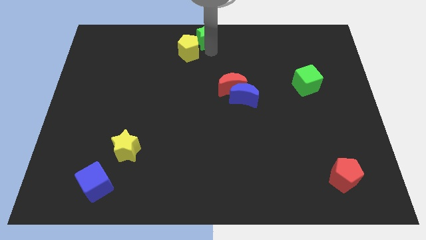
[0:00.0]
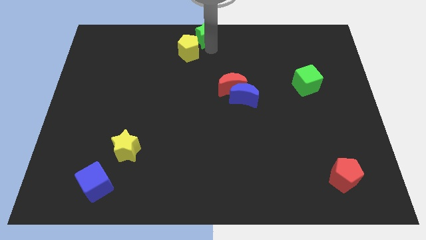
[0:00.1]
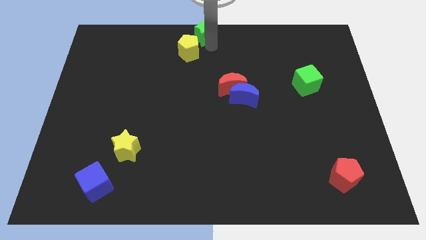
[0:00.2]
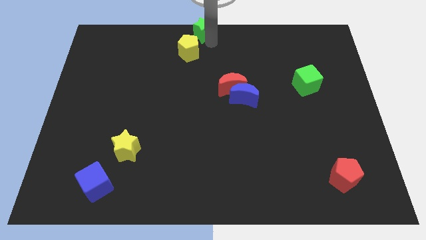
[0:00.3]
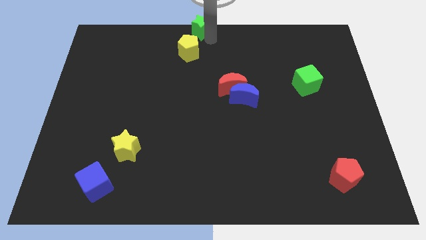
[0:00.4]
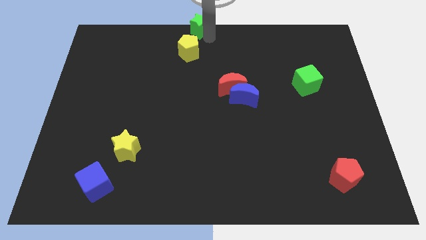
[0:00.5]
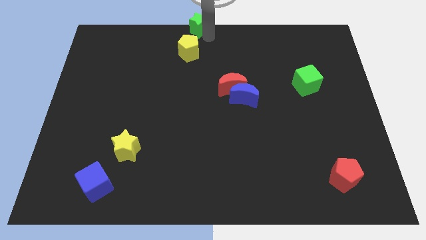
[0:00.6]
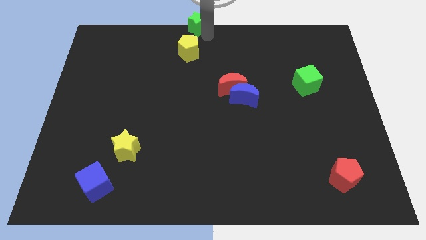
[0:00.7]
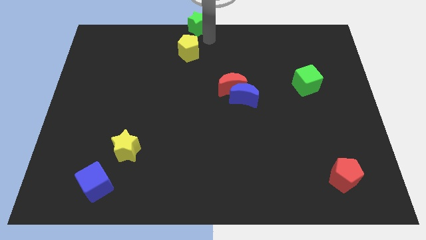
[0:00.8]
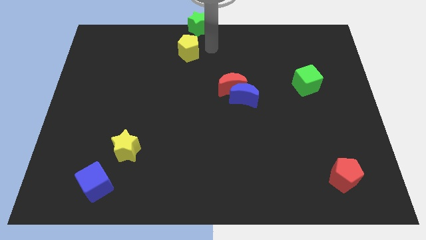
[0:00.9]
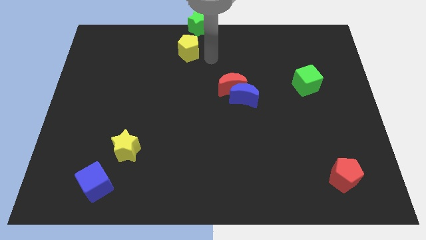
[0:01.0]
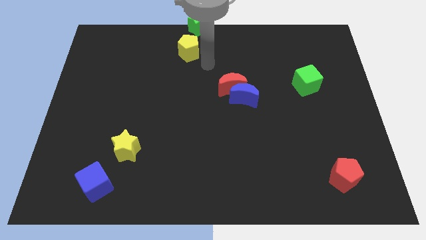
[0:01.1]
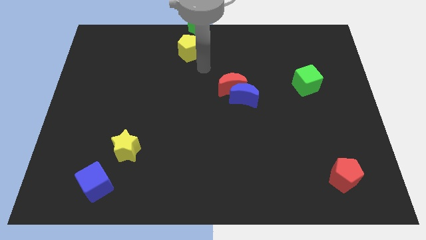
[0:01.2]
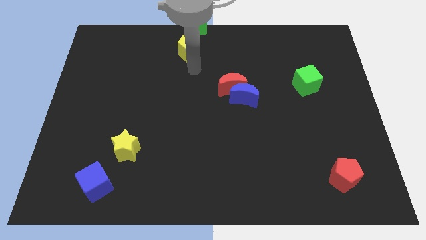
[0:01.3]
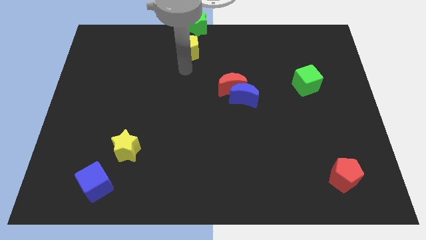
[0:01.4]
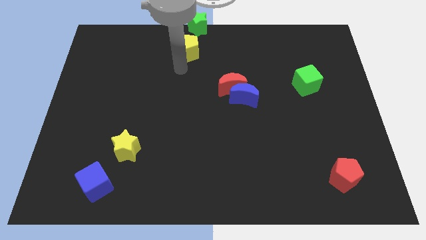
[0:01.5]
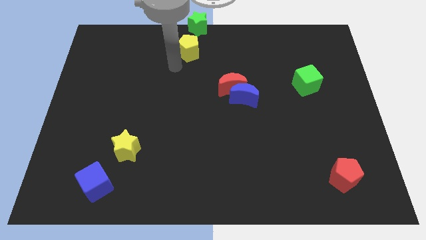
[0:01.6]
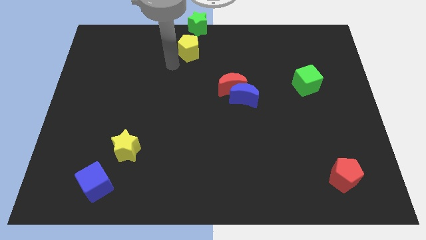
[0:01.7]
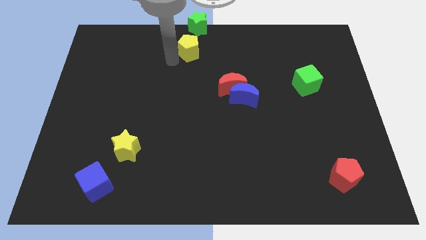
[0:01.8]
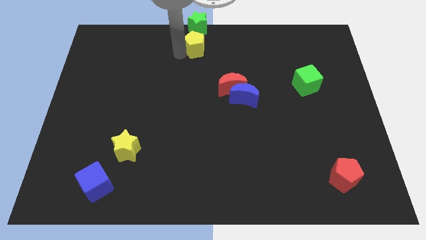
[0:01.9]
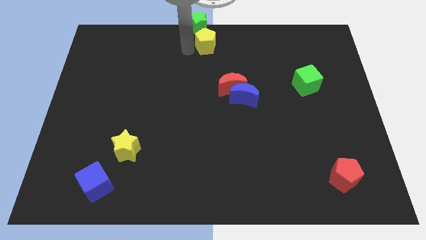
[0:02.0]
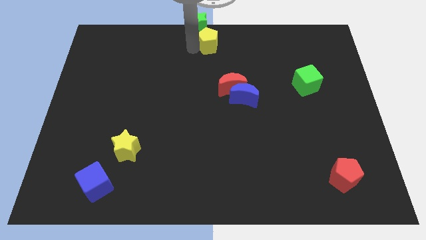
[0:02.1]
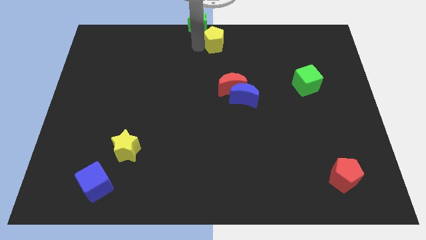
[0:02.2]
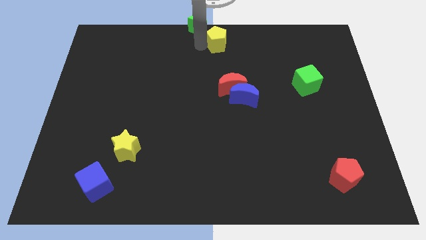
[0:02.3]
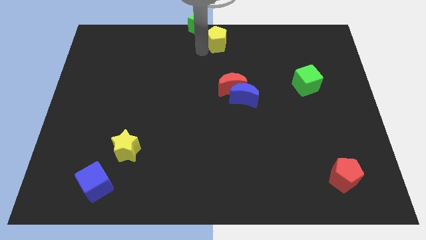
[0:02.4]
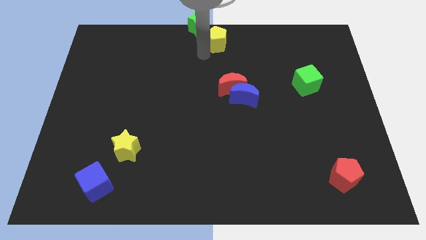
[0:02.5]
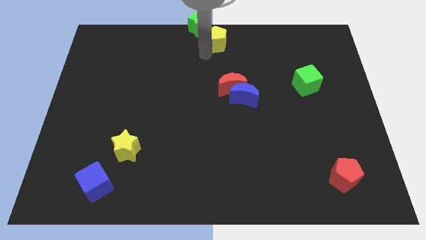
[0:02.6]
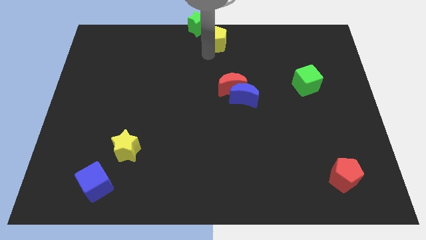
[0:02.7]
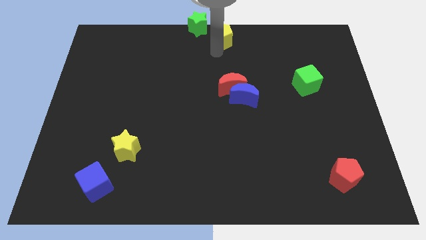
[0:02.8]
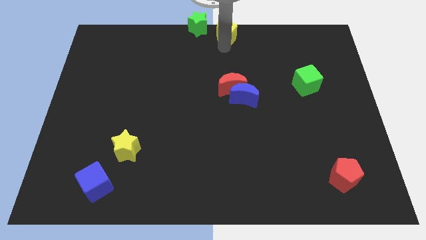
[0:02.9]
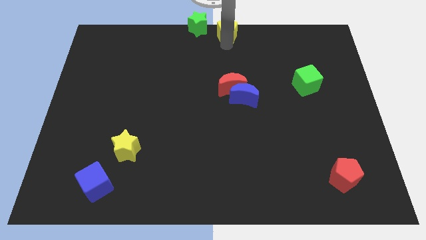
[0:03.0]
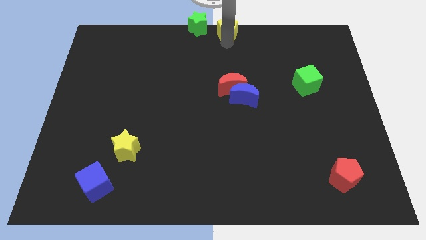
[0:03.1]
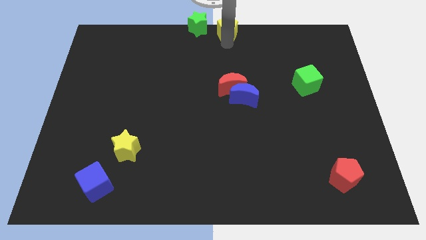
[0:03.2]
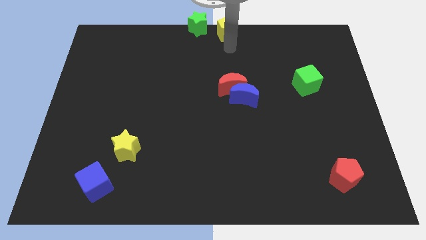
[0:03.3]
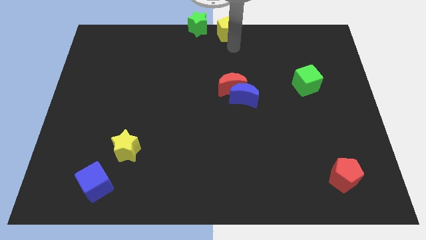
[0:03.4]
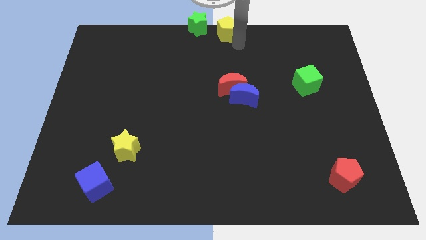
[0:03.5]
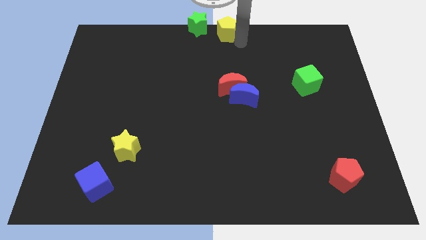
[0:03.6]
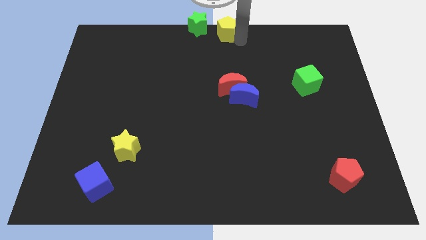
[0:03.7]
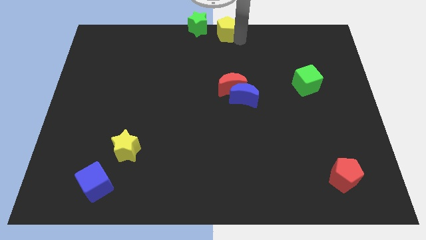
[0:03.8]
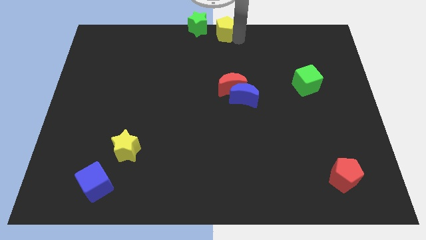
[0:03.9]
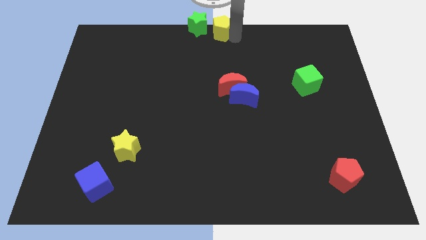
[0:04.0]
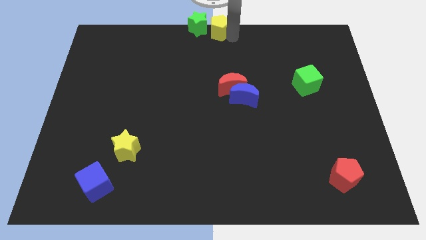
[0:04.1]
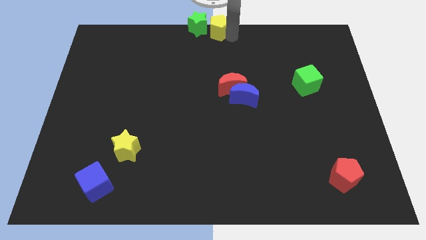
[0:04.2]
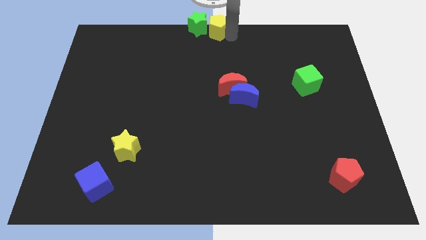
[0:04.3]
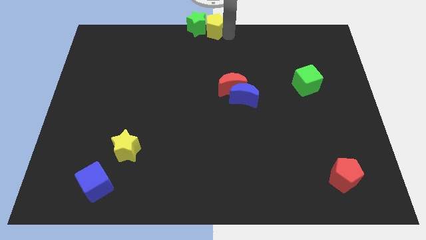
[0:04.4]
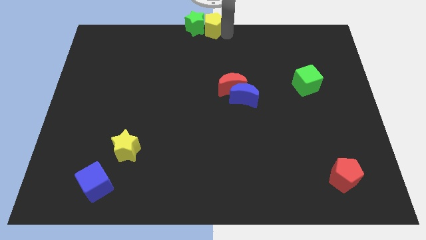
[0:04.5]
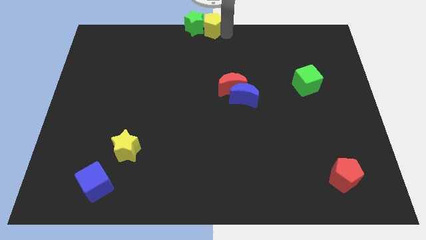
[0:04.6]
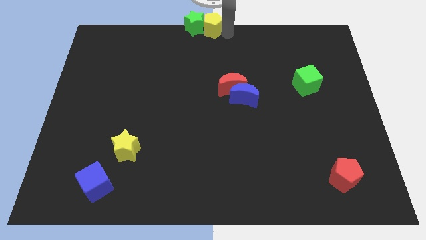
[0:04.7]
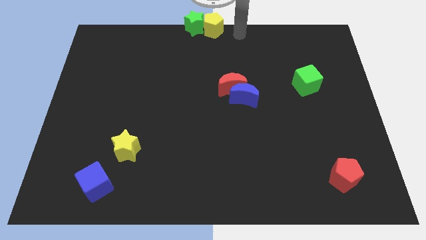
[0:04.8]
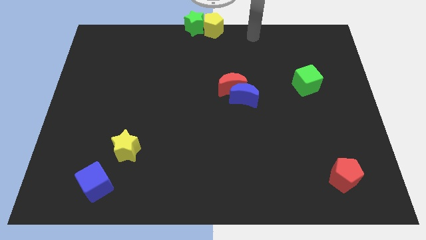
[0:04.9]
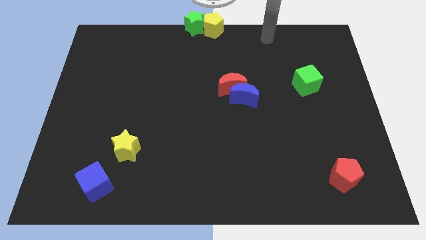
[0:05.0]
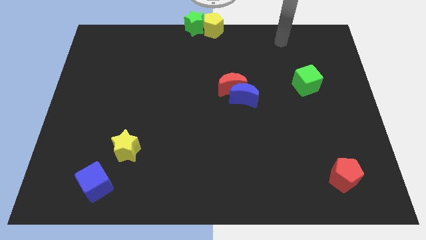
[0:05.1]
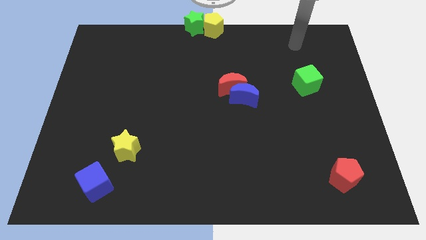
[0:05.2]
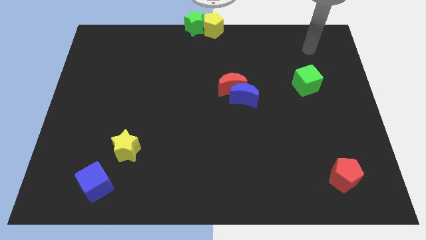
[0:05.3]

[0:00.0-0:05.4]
place the green star at top centre of the board along with the yellow pentagon

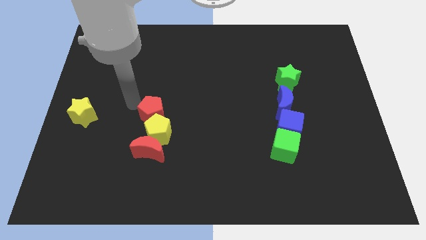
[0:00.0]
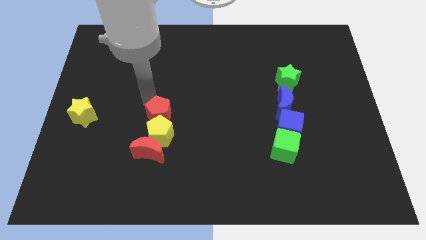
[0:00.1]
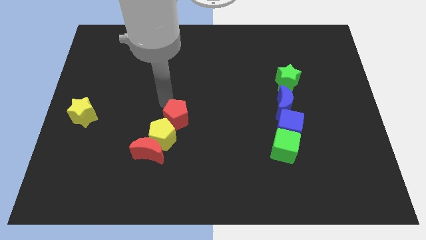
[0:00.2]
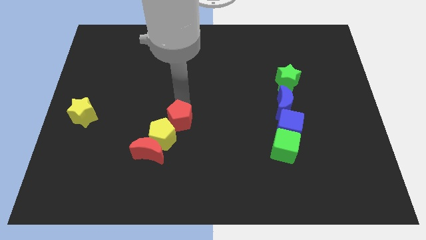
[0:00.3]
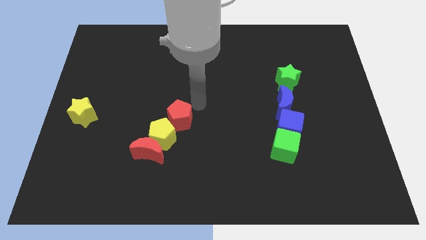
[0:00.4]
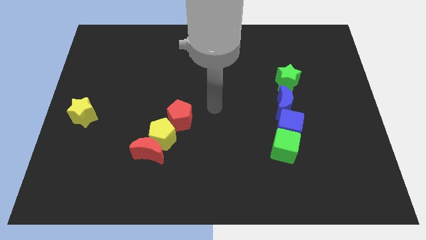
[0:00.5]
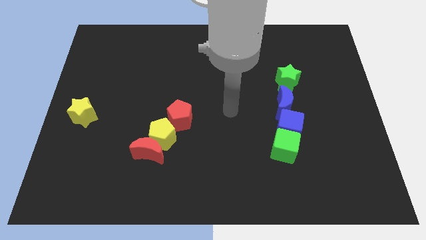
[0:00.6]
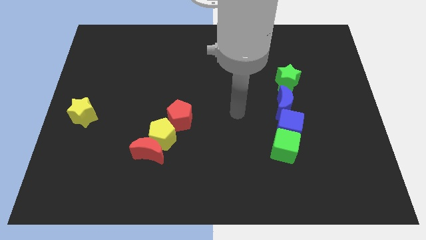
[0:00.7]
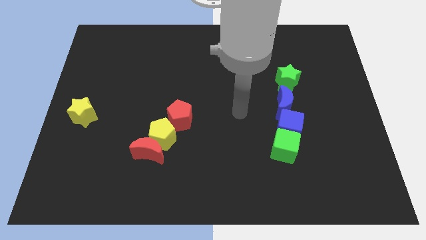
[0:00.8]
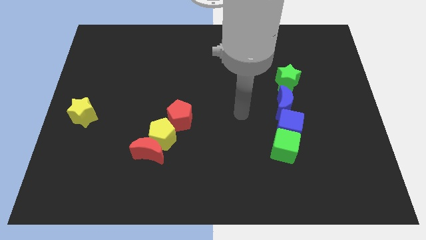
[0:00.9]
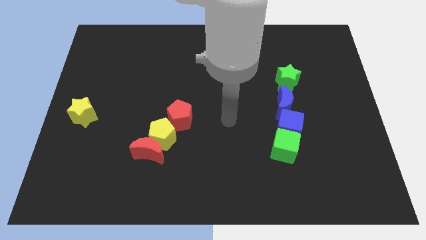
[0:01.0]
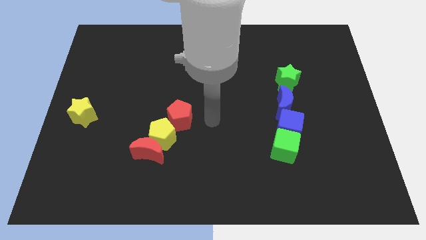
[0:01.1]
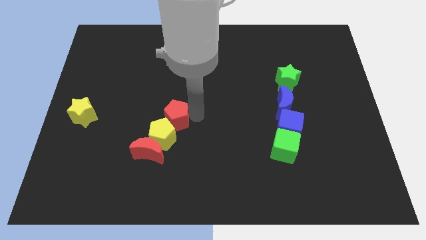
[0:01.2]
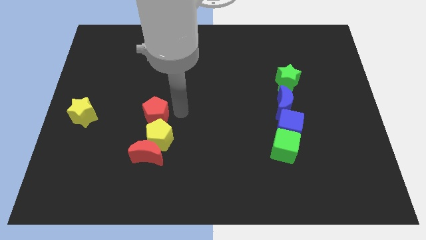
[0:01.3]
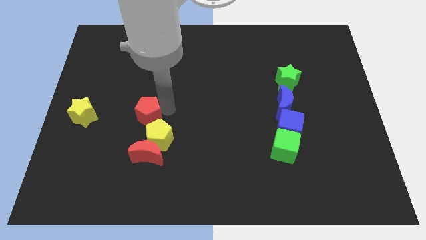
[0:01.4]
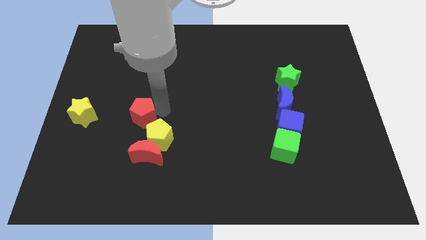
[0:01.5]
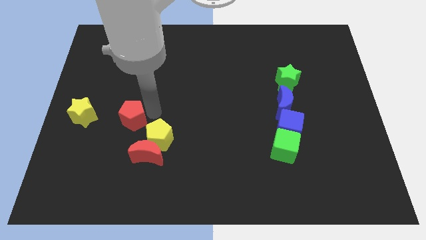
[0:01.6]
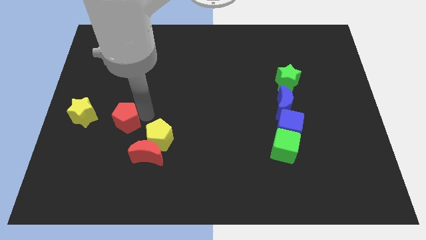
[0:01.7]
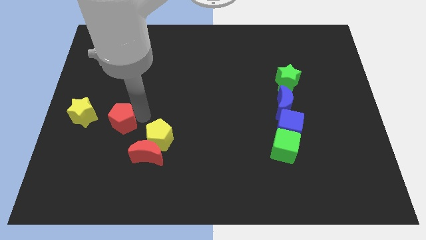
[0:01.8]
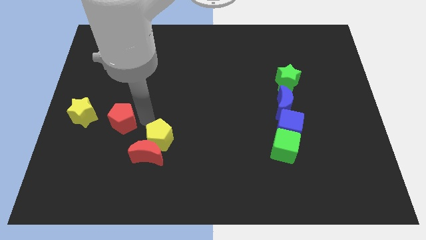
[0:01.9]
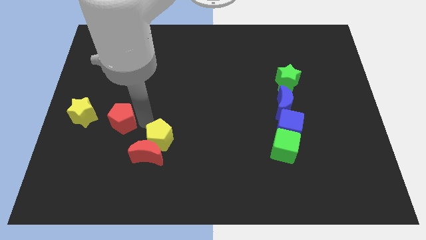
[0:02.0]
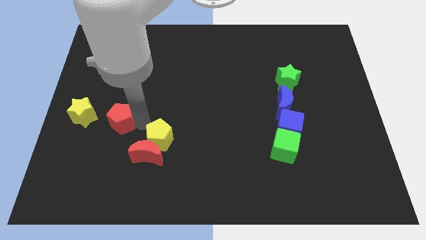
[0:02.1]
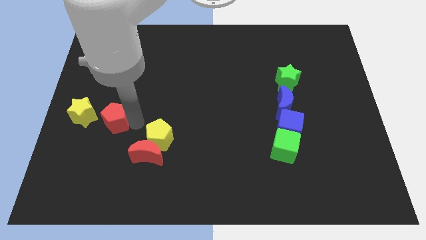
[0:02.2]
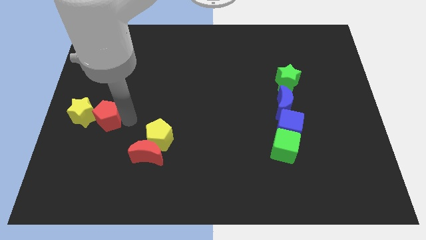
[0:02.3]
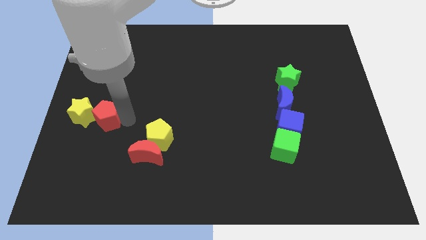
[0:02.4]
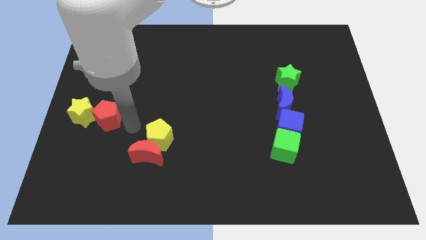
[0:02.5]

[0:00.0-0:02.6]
move the red pentagon to the right to the yellow star

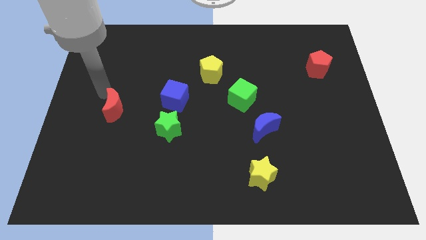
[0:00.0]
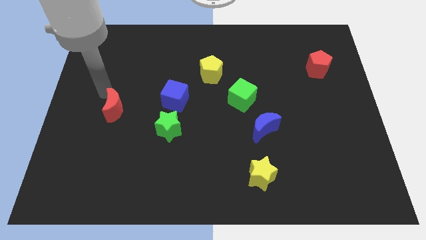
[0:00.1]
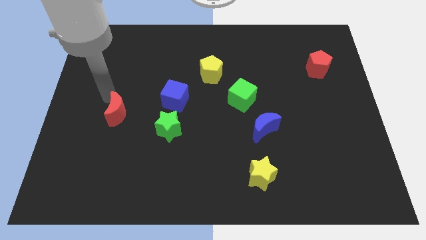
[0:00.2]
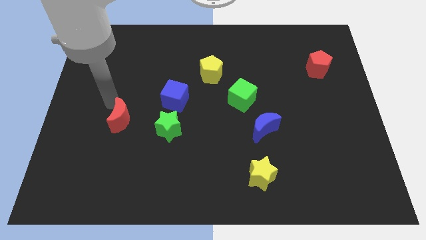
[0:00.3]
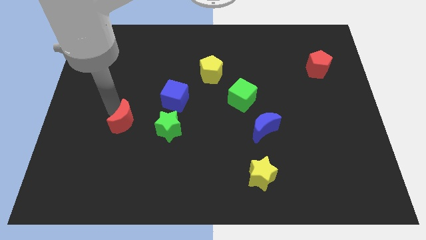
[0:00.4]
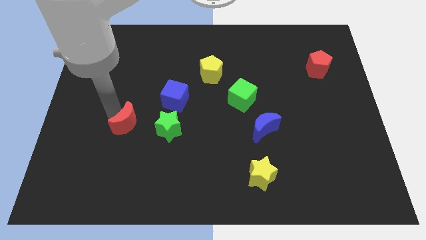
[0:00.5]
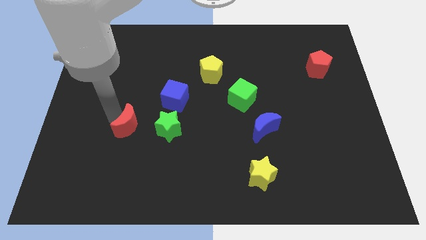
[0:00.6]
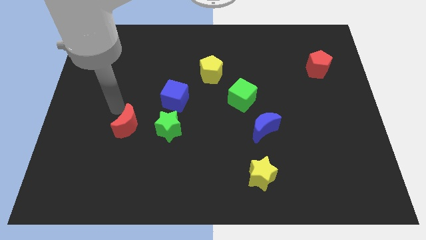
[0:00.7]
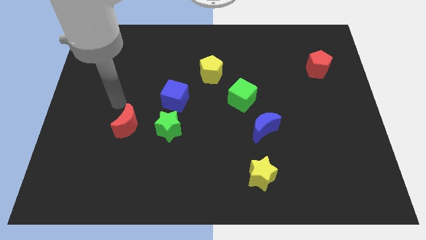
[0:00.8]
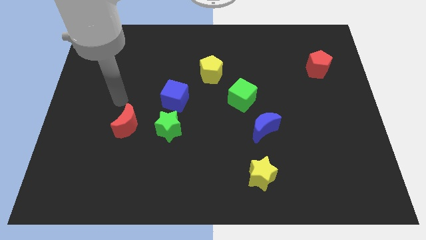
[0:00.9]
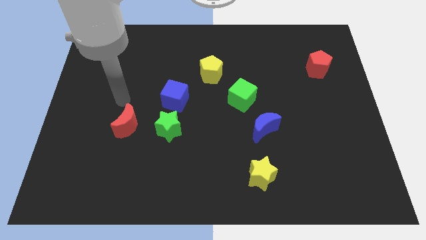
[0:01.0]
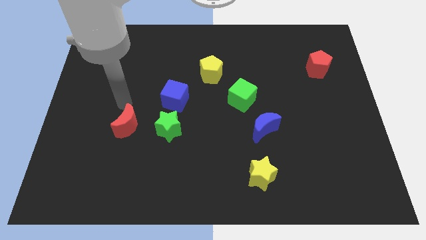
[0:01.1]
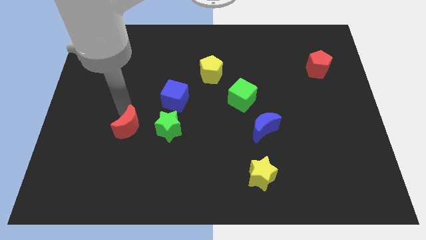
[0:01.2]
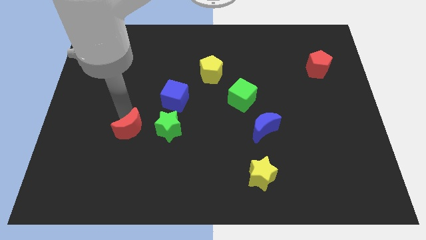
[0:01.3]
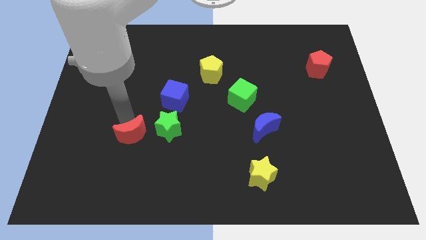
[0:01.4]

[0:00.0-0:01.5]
put the red moon to the left of green star
